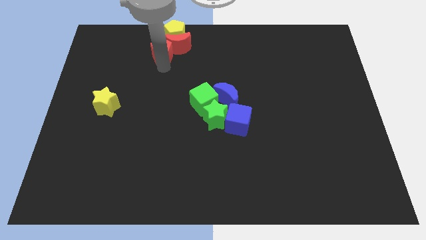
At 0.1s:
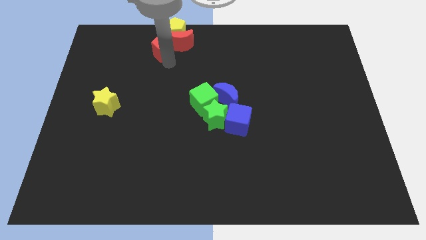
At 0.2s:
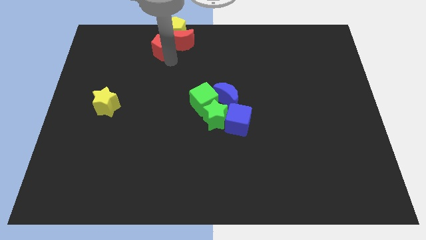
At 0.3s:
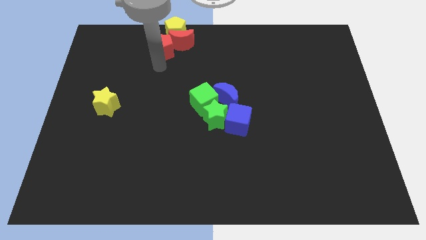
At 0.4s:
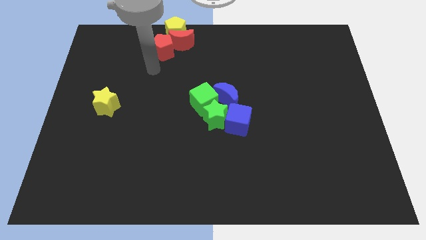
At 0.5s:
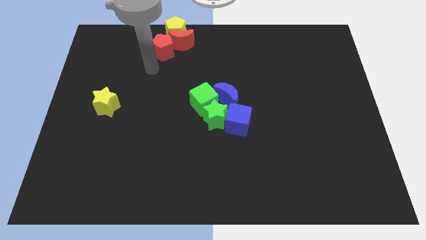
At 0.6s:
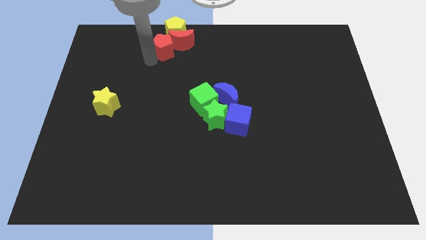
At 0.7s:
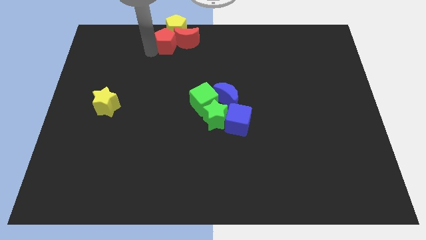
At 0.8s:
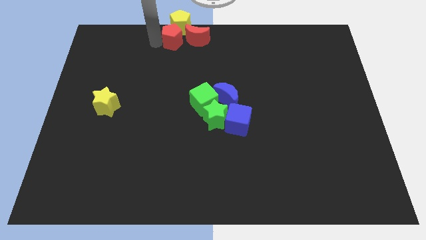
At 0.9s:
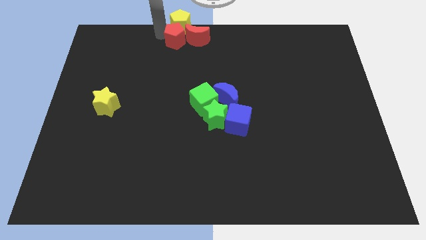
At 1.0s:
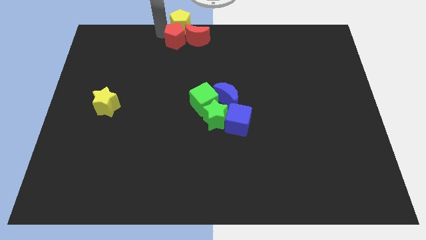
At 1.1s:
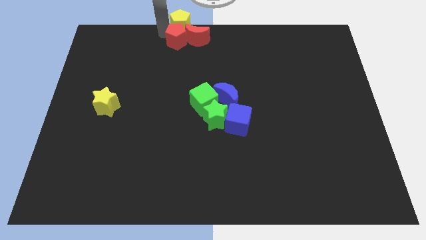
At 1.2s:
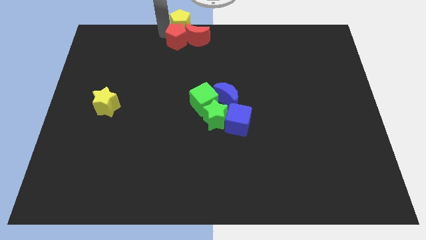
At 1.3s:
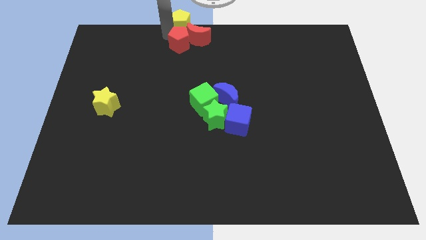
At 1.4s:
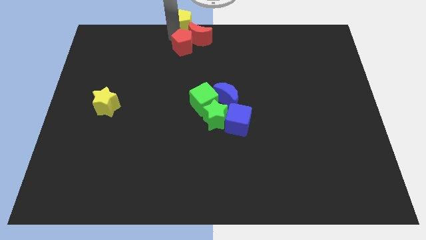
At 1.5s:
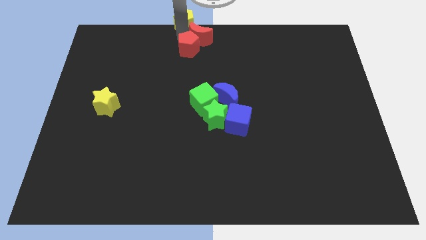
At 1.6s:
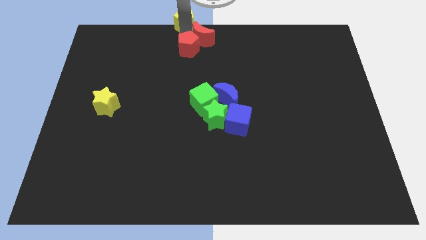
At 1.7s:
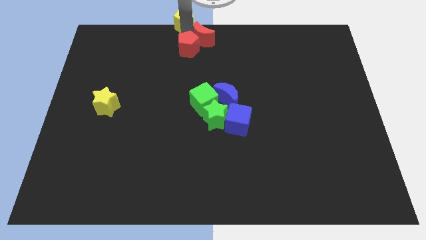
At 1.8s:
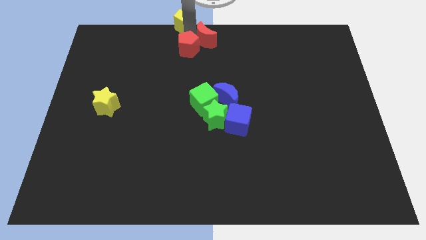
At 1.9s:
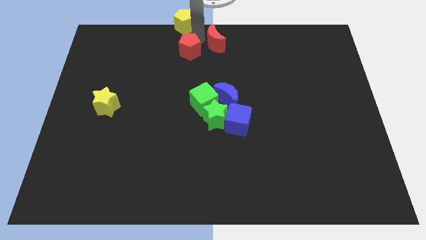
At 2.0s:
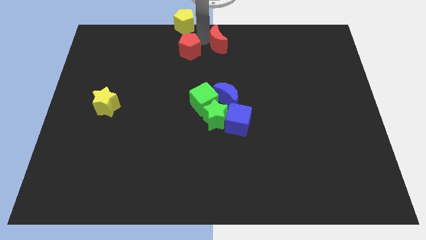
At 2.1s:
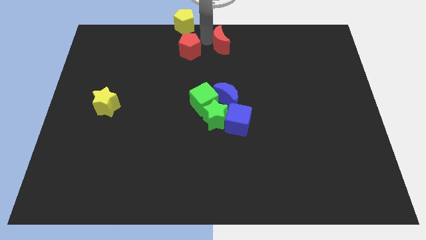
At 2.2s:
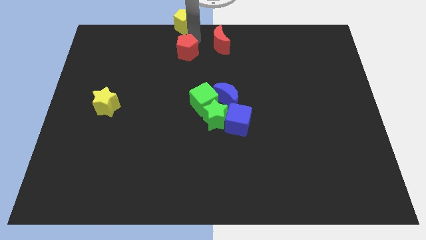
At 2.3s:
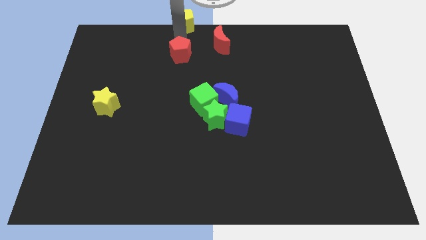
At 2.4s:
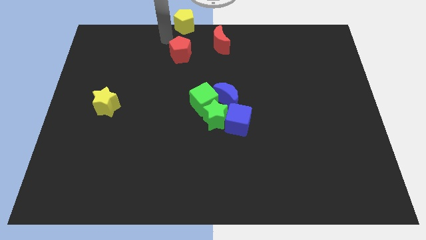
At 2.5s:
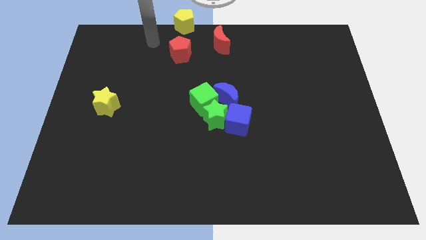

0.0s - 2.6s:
separate the red crescent and red pentagon

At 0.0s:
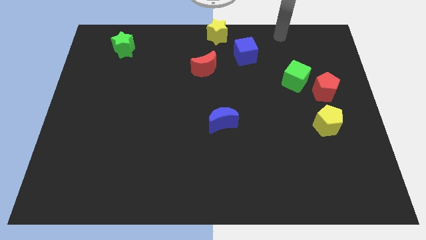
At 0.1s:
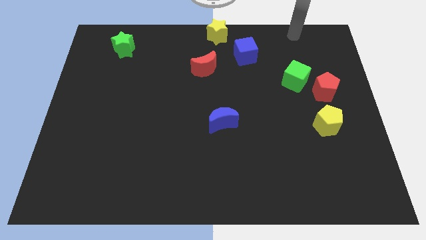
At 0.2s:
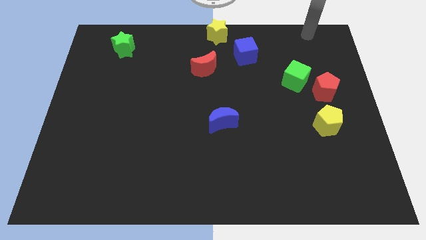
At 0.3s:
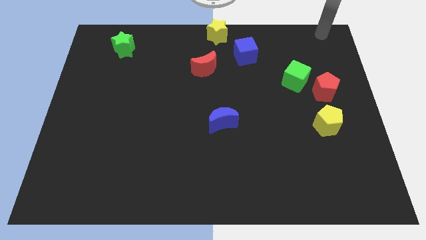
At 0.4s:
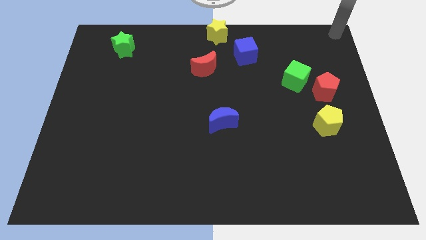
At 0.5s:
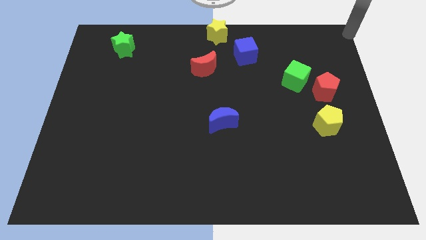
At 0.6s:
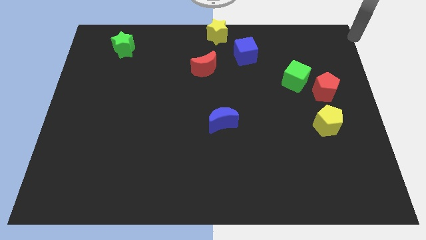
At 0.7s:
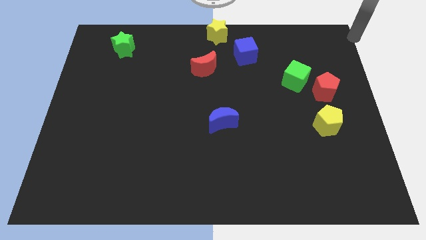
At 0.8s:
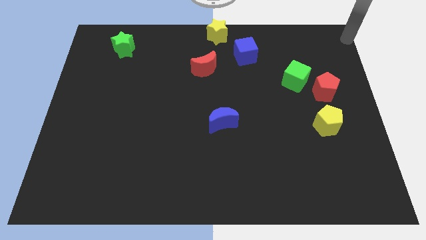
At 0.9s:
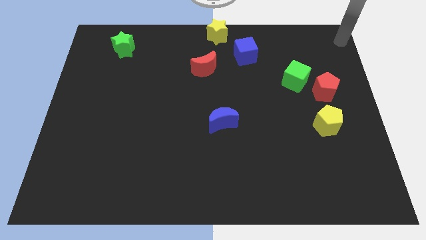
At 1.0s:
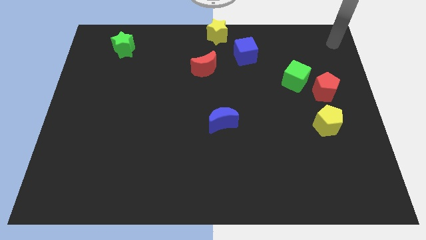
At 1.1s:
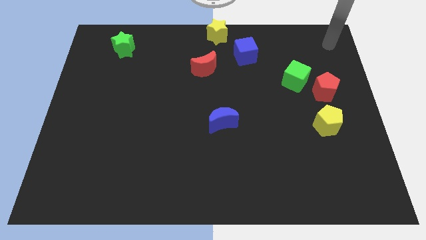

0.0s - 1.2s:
move the arm near to the top right corner

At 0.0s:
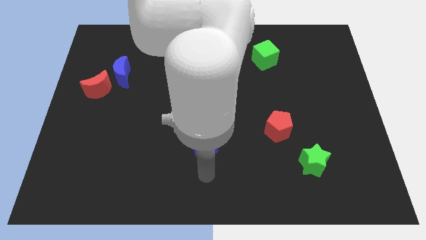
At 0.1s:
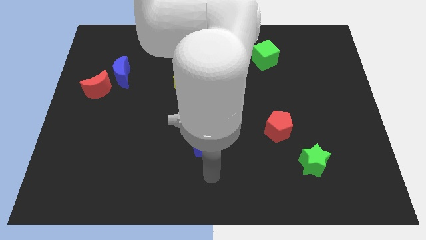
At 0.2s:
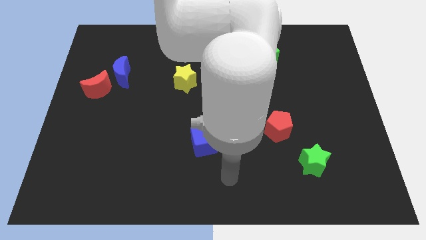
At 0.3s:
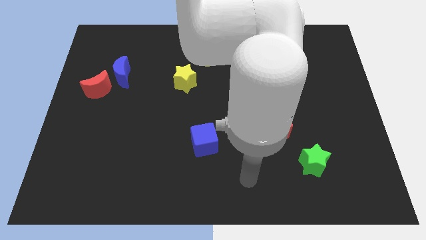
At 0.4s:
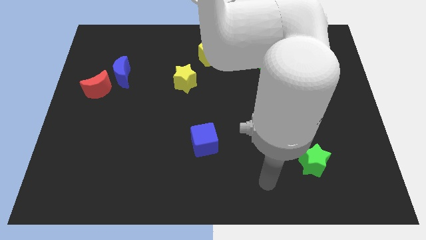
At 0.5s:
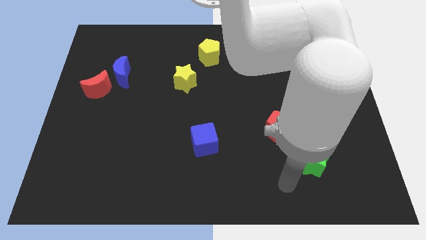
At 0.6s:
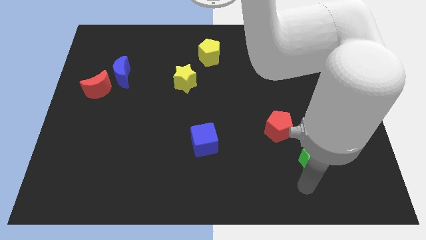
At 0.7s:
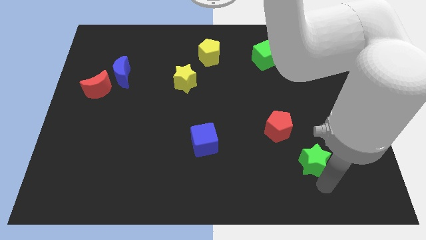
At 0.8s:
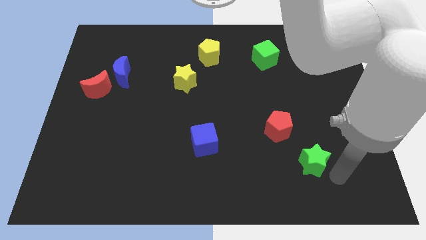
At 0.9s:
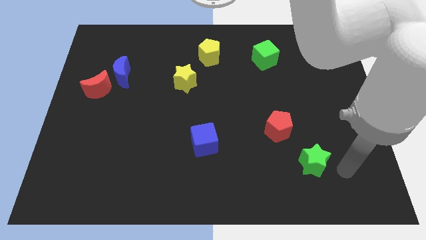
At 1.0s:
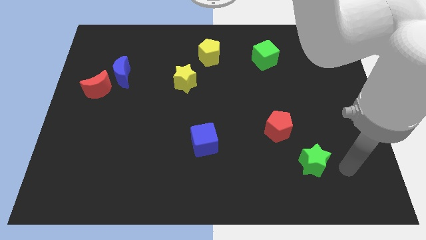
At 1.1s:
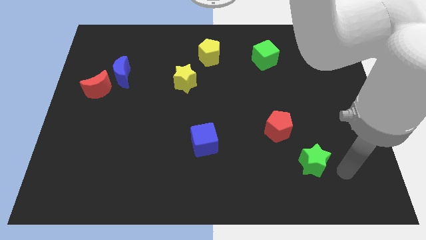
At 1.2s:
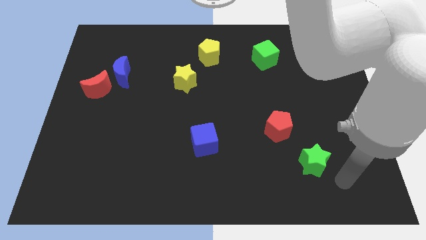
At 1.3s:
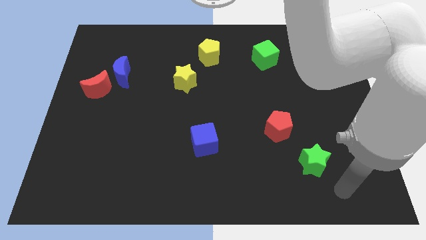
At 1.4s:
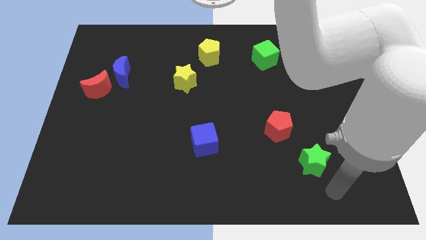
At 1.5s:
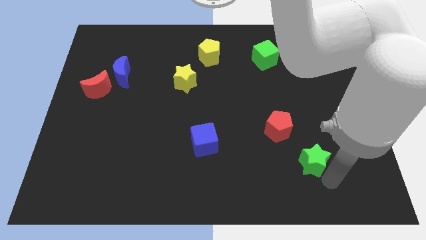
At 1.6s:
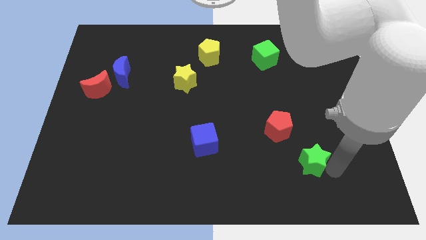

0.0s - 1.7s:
point your arm to the right of the green star

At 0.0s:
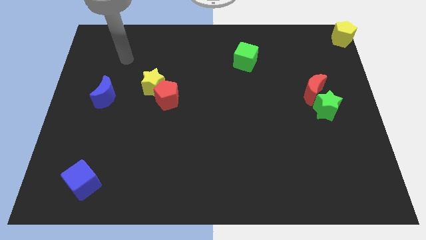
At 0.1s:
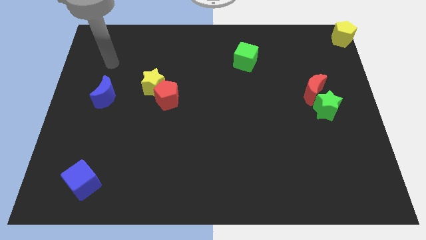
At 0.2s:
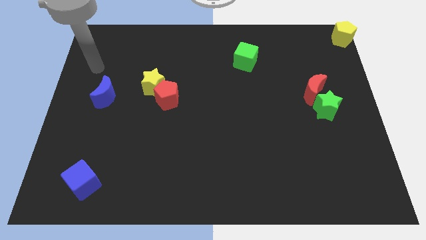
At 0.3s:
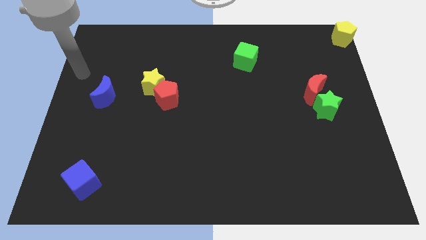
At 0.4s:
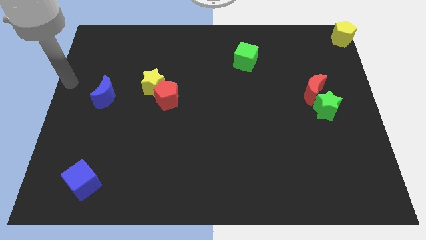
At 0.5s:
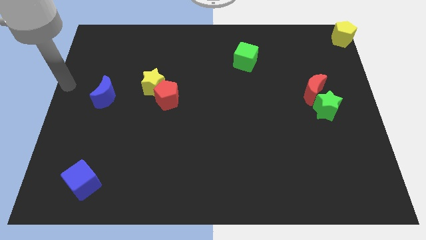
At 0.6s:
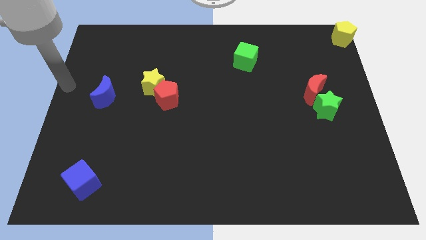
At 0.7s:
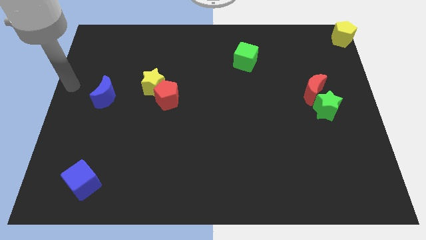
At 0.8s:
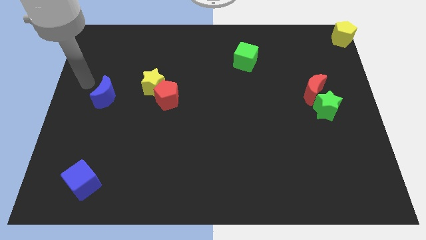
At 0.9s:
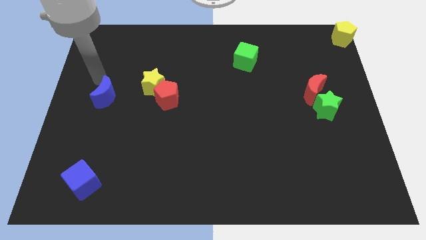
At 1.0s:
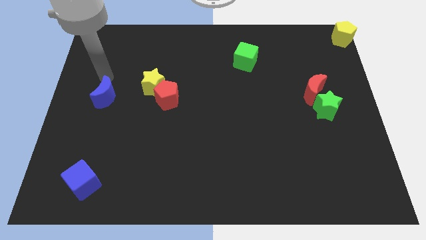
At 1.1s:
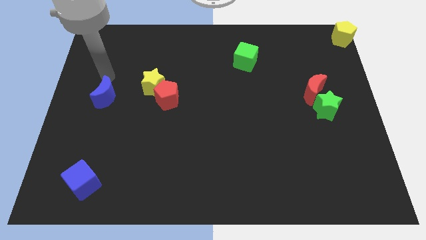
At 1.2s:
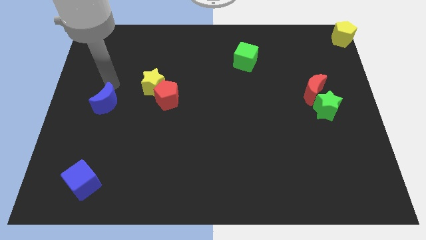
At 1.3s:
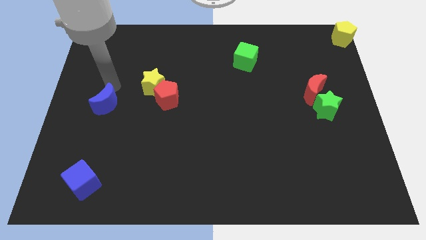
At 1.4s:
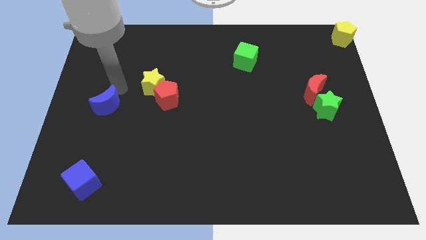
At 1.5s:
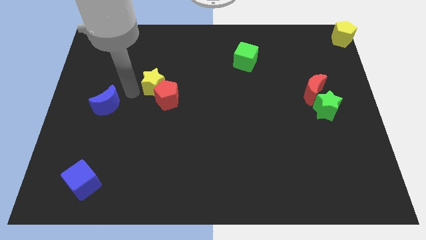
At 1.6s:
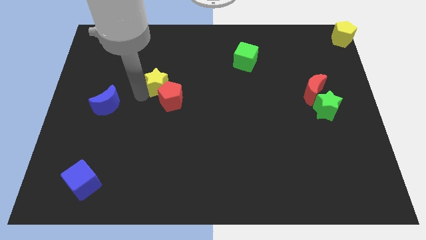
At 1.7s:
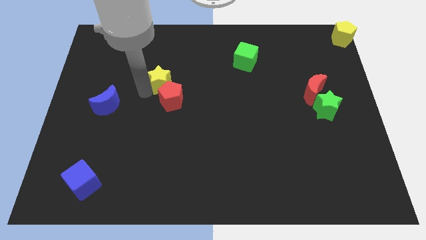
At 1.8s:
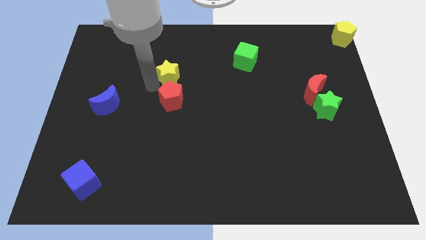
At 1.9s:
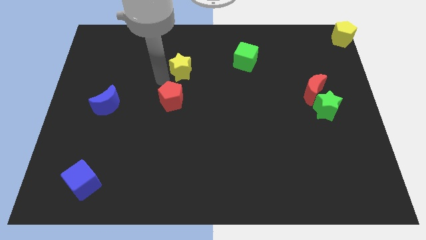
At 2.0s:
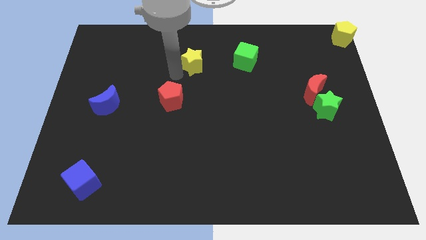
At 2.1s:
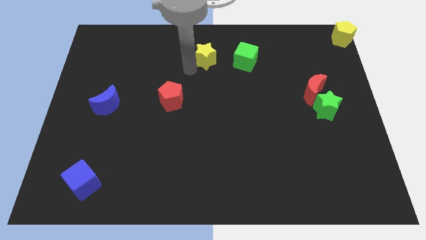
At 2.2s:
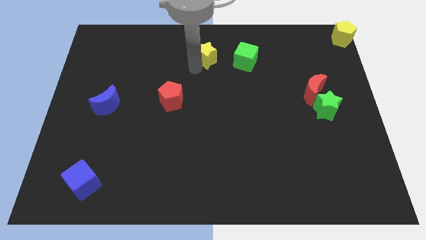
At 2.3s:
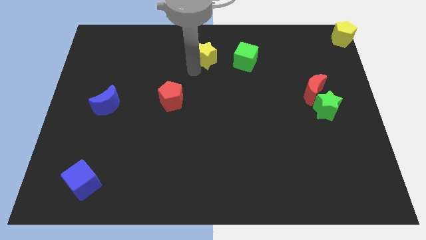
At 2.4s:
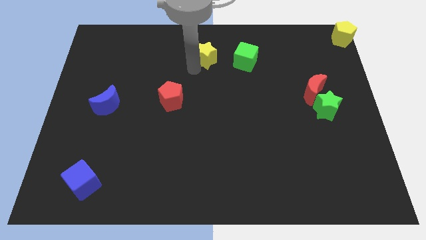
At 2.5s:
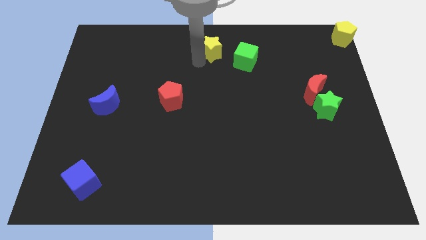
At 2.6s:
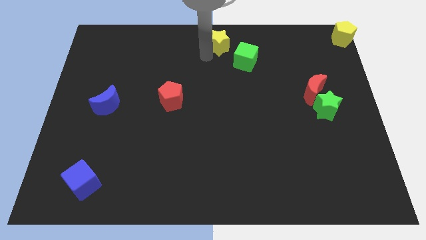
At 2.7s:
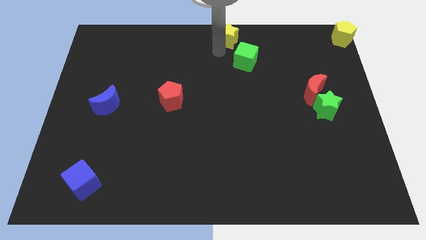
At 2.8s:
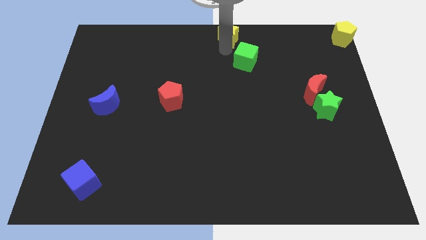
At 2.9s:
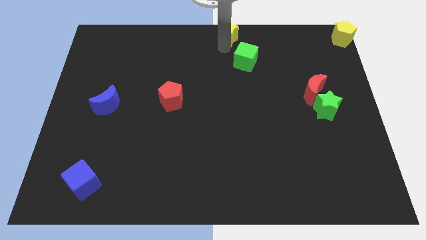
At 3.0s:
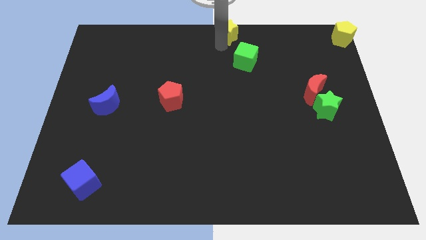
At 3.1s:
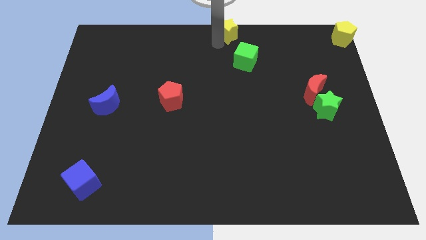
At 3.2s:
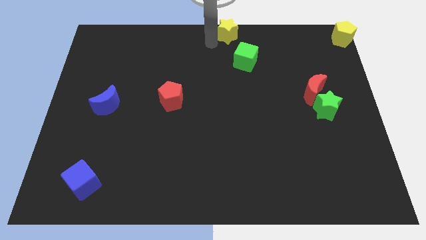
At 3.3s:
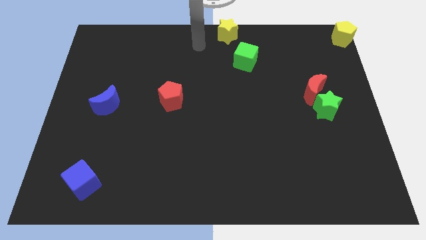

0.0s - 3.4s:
place the yellow star to the top center of the board

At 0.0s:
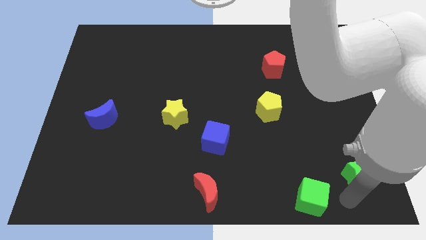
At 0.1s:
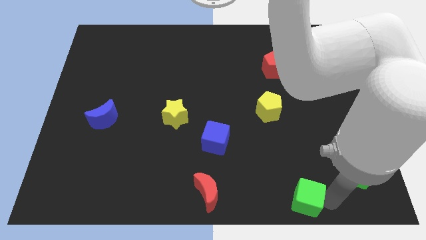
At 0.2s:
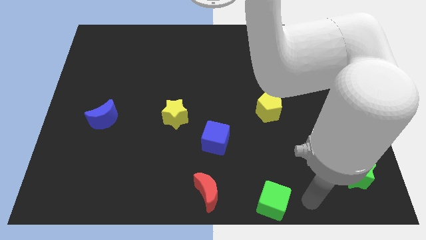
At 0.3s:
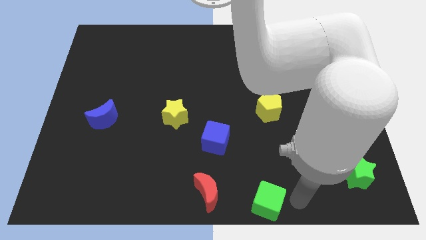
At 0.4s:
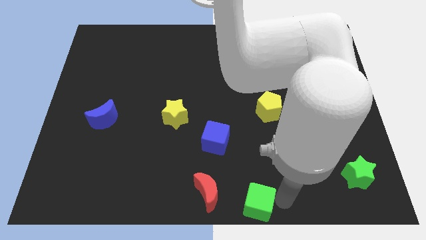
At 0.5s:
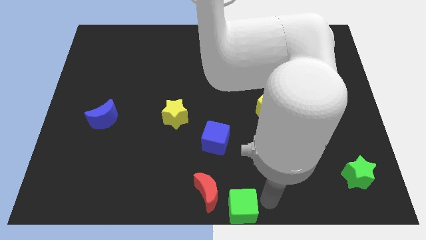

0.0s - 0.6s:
push the green cube near to the red crescent
